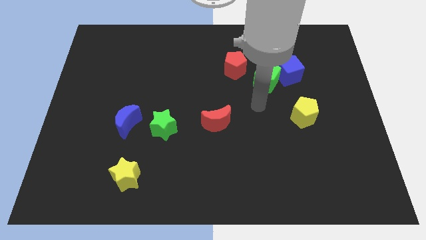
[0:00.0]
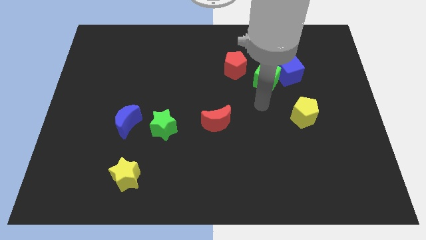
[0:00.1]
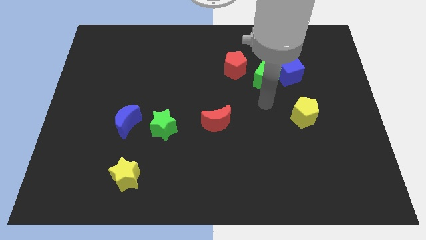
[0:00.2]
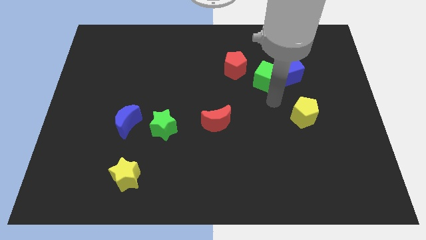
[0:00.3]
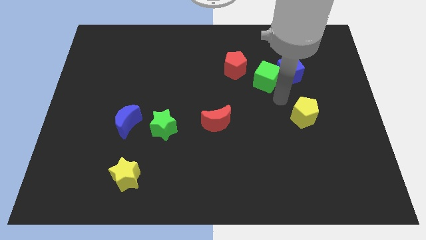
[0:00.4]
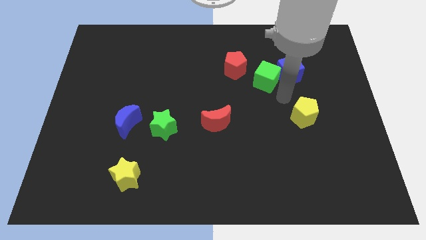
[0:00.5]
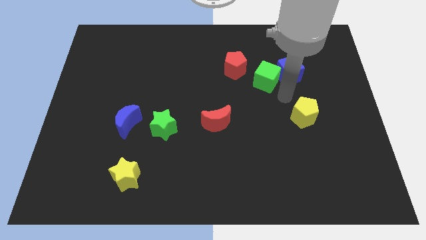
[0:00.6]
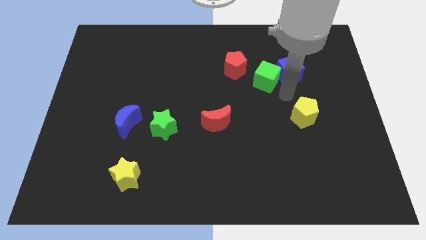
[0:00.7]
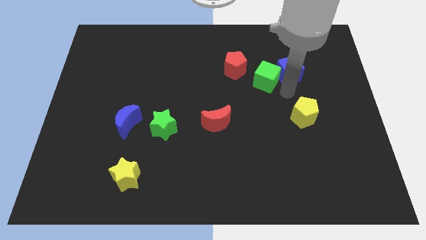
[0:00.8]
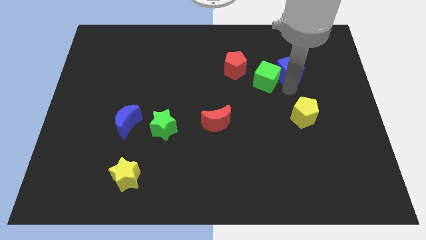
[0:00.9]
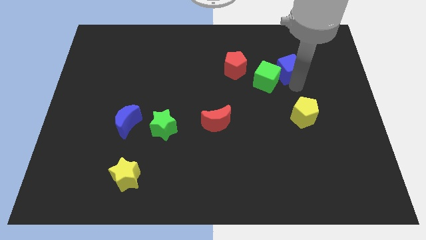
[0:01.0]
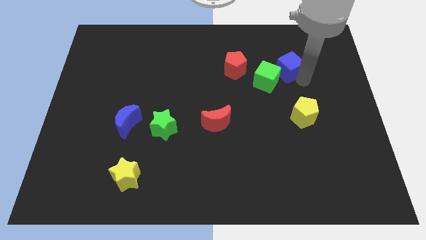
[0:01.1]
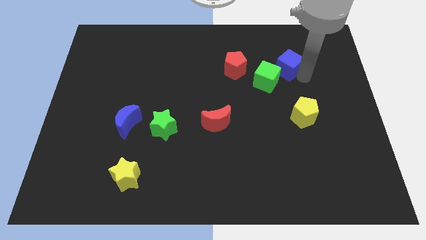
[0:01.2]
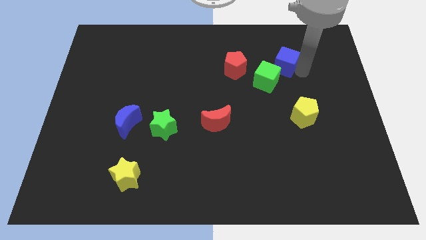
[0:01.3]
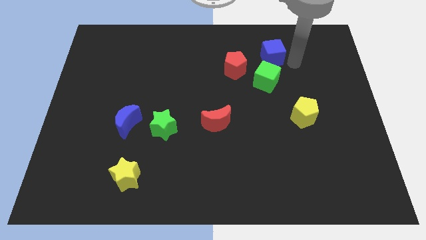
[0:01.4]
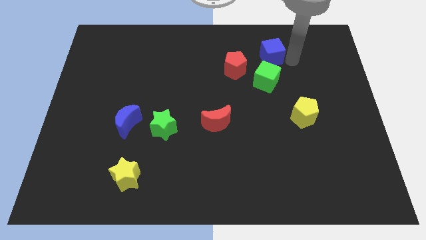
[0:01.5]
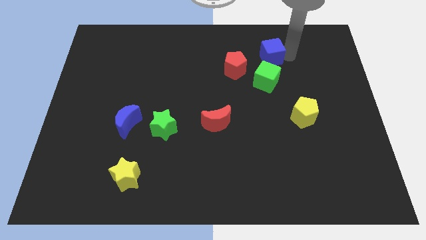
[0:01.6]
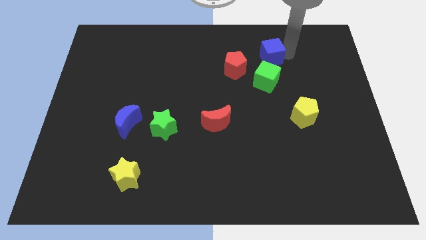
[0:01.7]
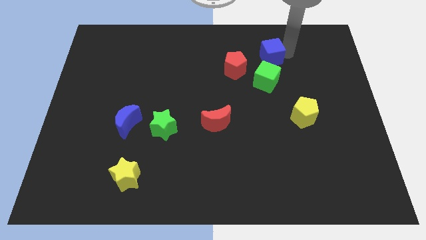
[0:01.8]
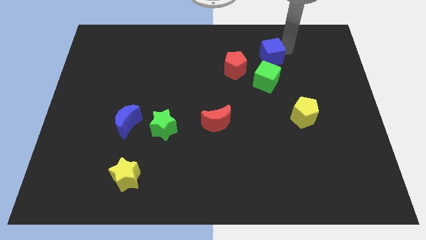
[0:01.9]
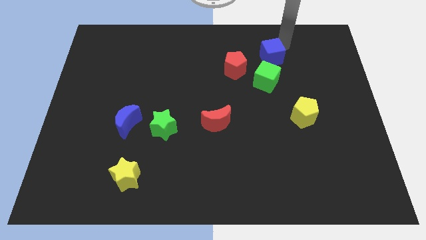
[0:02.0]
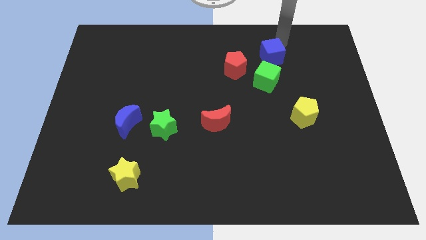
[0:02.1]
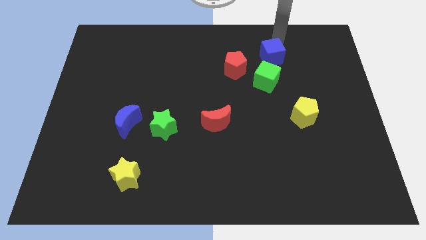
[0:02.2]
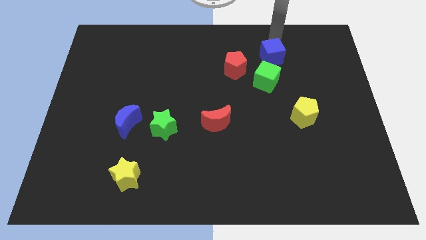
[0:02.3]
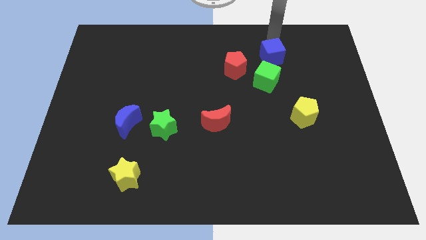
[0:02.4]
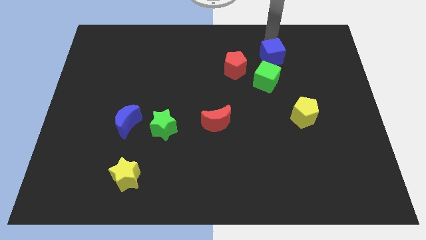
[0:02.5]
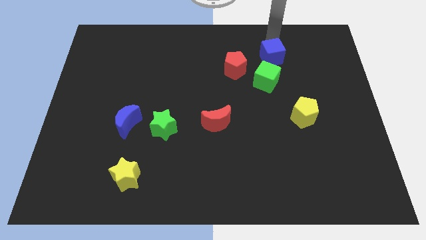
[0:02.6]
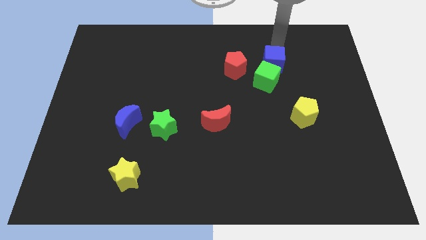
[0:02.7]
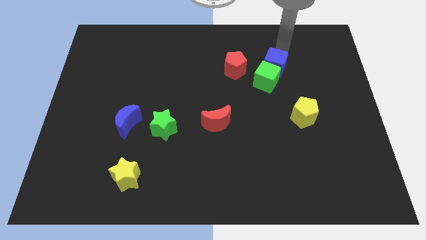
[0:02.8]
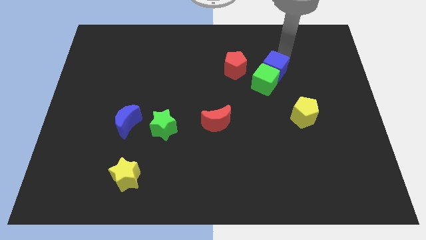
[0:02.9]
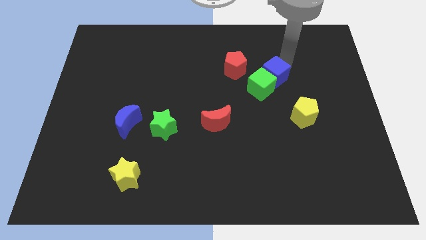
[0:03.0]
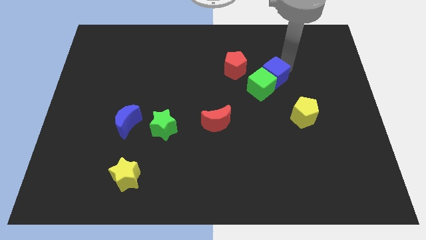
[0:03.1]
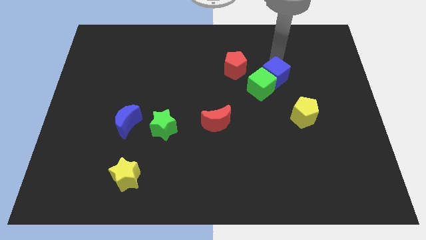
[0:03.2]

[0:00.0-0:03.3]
move the blue cube into the green cube

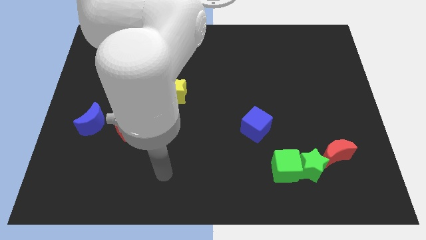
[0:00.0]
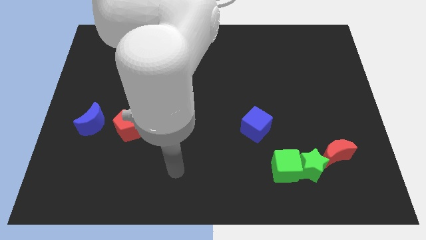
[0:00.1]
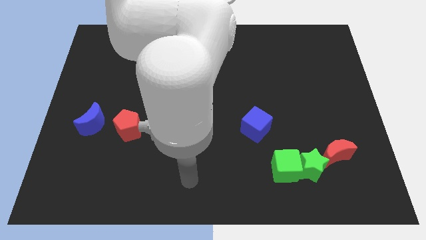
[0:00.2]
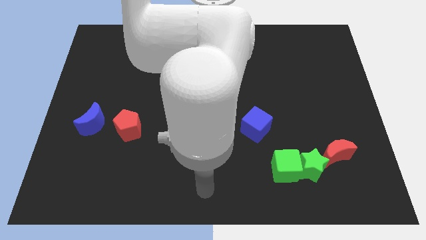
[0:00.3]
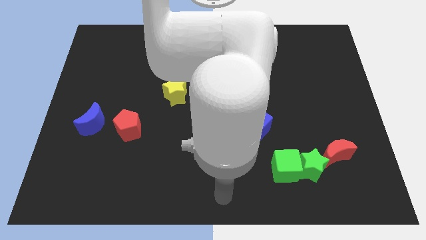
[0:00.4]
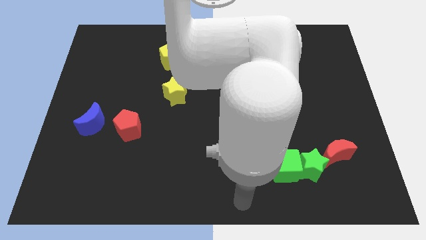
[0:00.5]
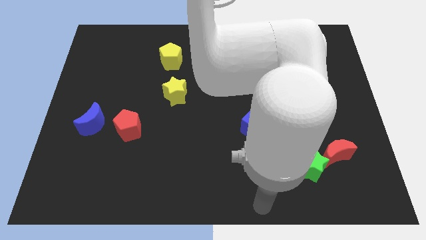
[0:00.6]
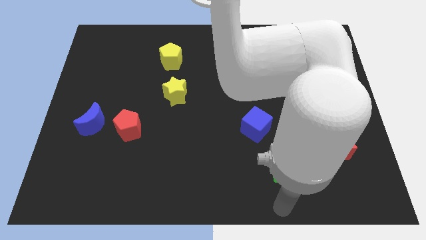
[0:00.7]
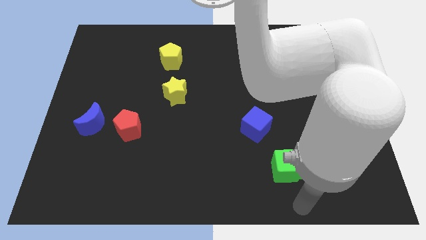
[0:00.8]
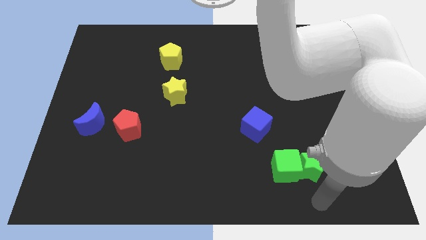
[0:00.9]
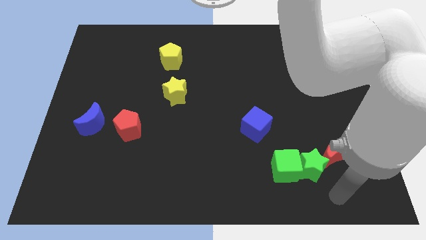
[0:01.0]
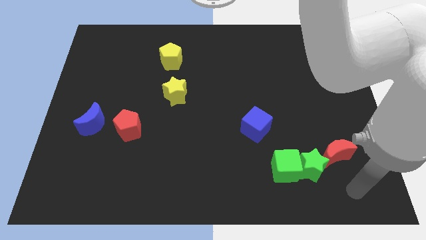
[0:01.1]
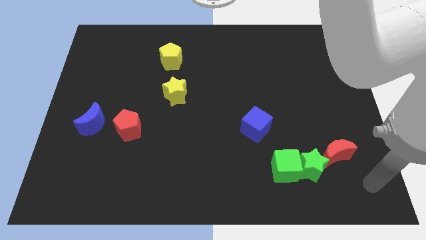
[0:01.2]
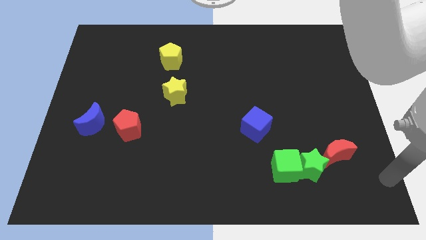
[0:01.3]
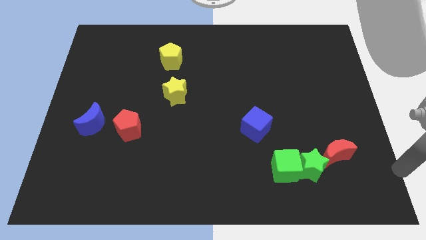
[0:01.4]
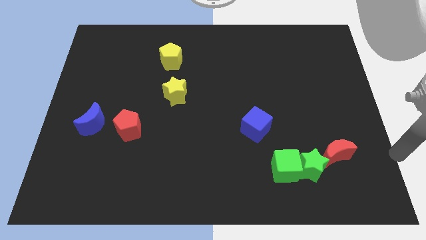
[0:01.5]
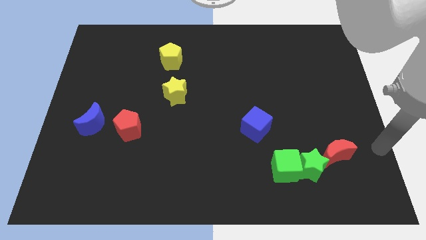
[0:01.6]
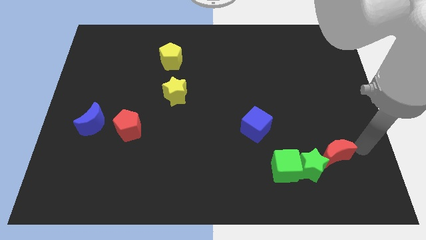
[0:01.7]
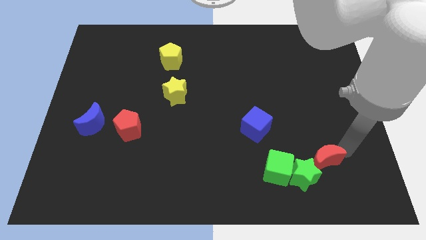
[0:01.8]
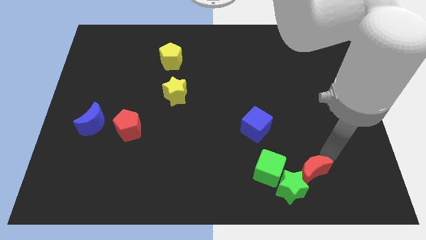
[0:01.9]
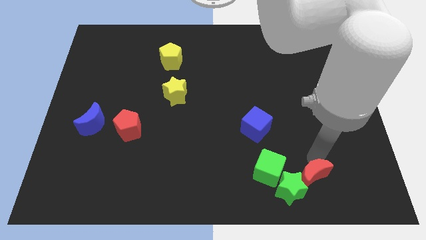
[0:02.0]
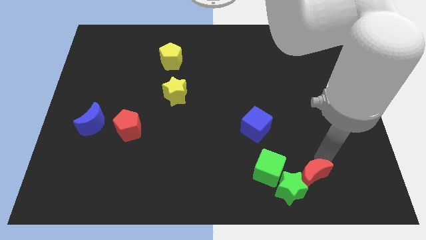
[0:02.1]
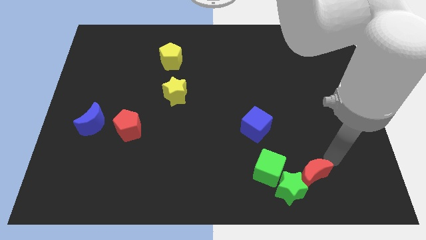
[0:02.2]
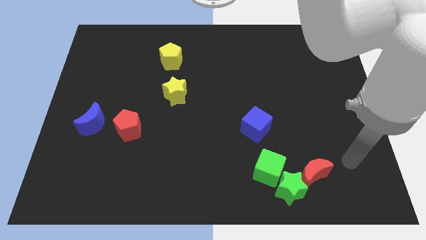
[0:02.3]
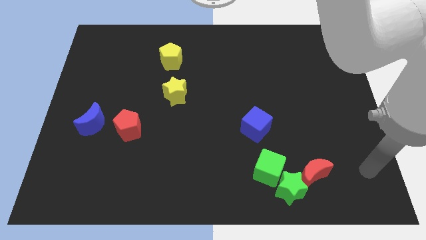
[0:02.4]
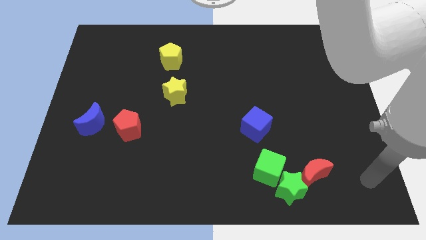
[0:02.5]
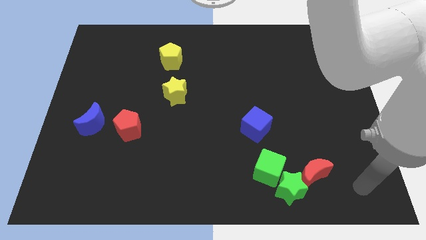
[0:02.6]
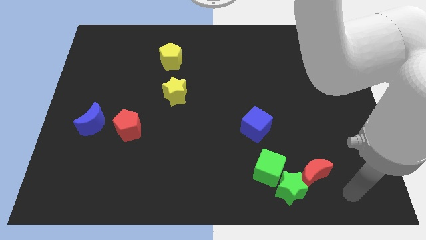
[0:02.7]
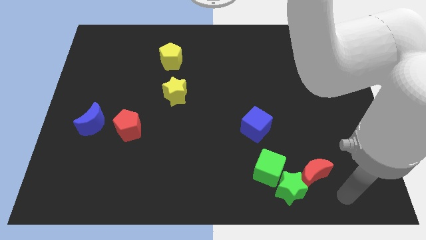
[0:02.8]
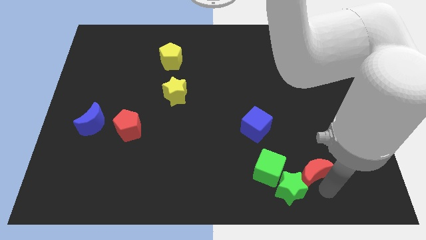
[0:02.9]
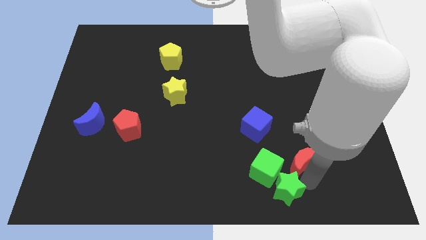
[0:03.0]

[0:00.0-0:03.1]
make a triangle with green blocks and red moon

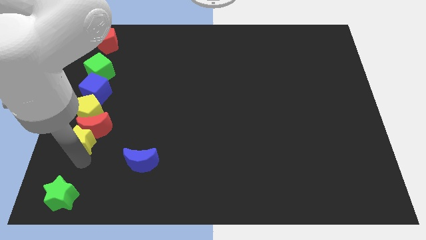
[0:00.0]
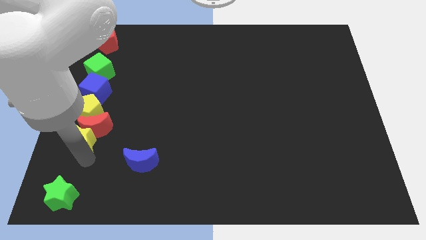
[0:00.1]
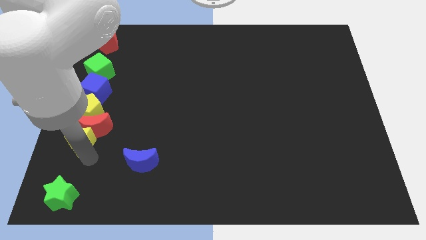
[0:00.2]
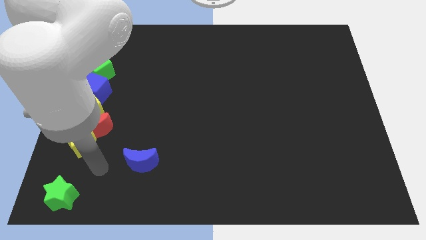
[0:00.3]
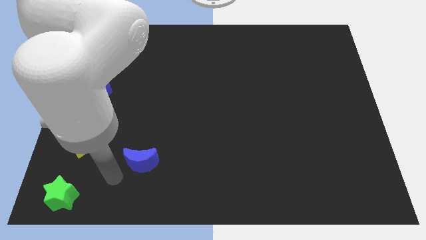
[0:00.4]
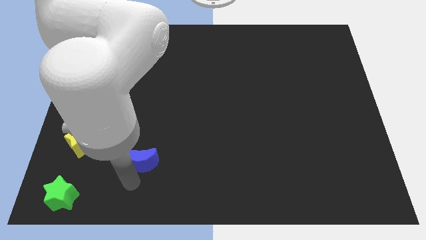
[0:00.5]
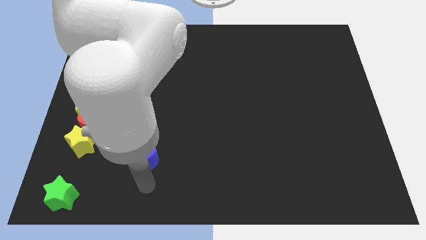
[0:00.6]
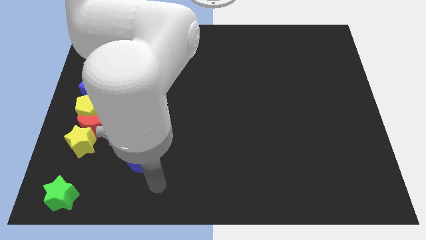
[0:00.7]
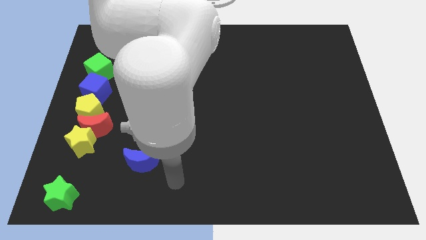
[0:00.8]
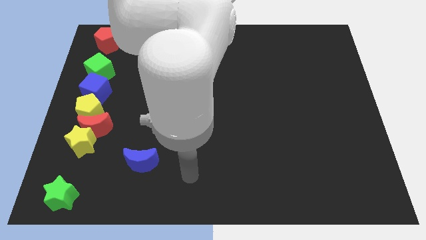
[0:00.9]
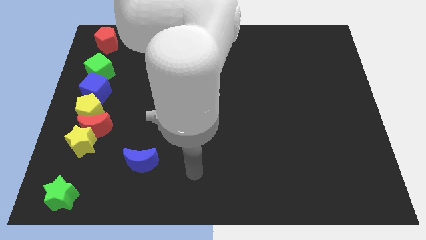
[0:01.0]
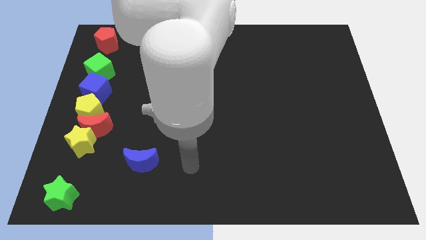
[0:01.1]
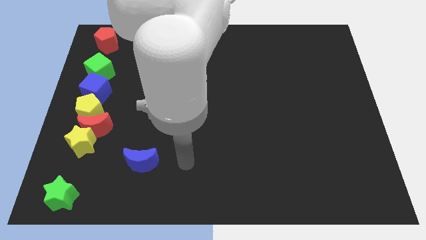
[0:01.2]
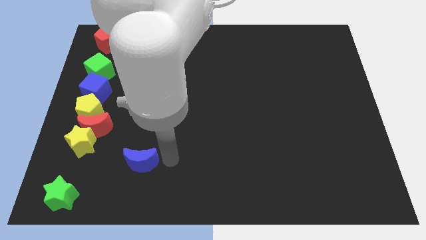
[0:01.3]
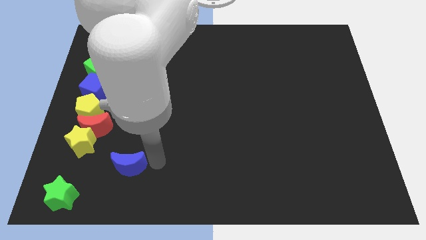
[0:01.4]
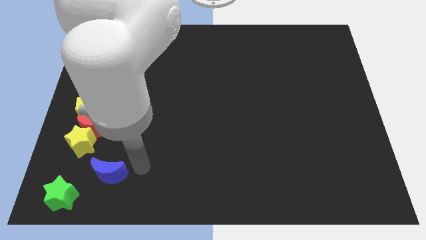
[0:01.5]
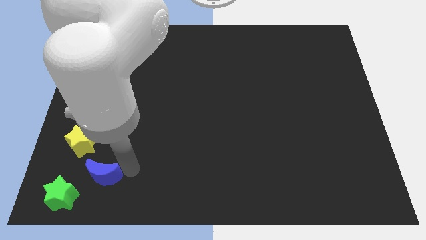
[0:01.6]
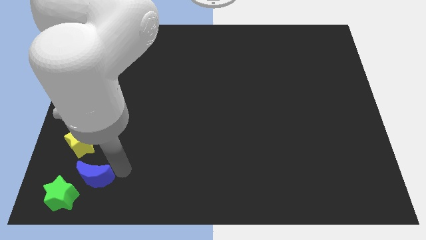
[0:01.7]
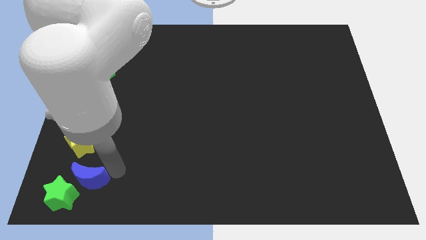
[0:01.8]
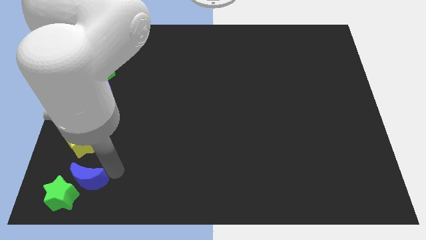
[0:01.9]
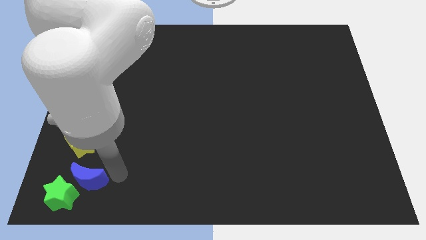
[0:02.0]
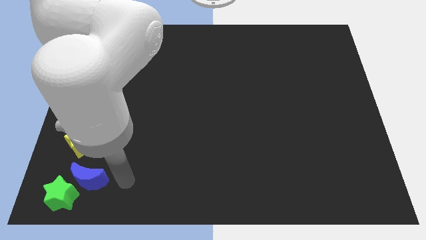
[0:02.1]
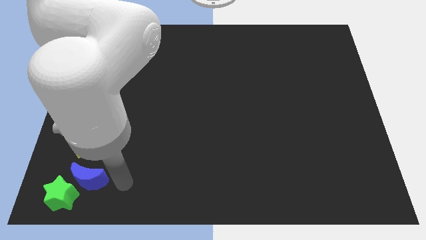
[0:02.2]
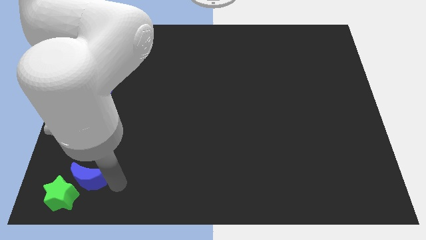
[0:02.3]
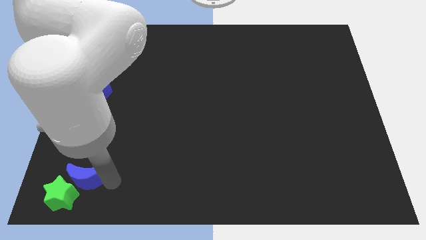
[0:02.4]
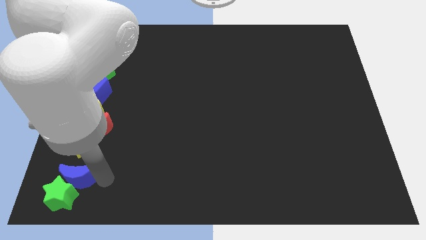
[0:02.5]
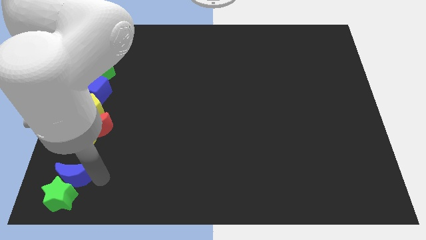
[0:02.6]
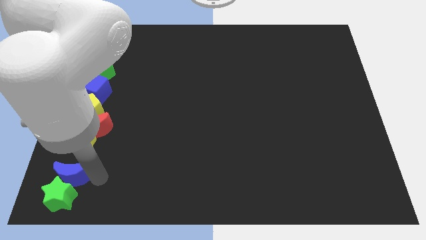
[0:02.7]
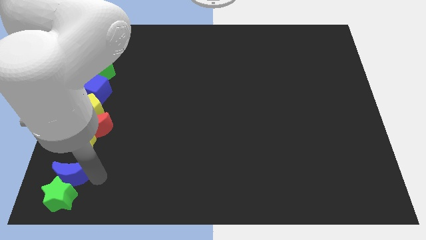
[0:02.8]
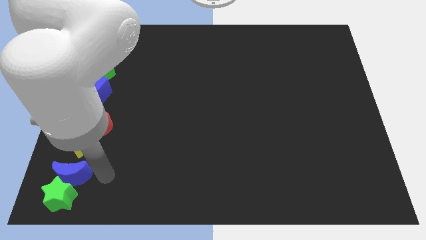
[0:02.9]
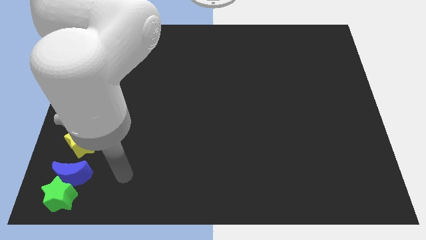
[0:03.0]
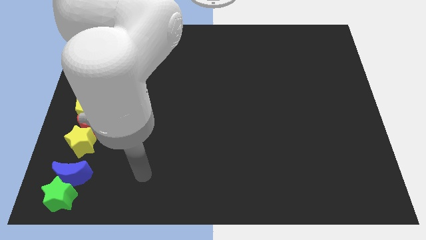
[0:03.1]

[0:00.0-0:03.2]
put the blue moon in between the yellow star and green star
